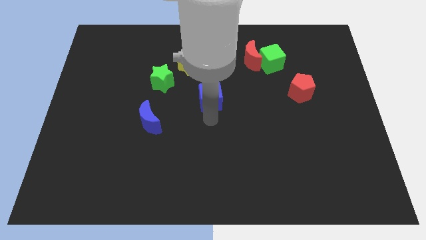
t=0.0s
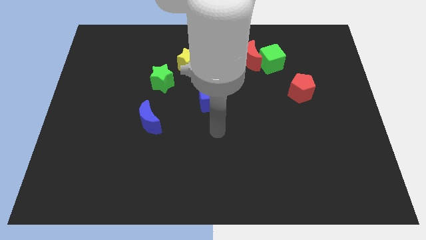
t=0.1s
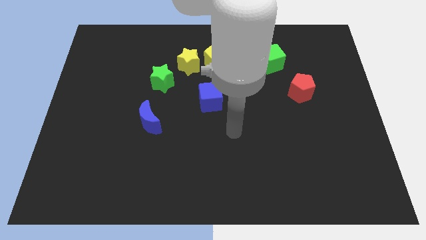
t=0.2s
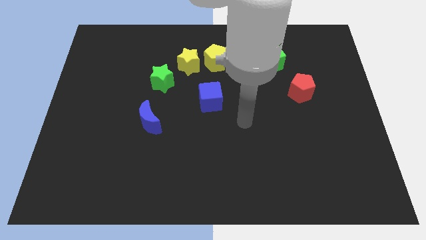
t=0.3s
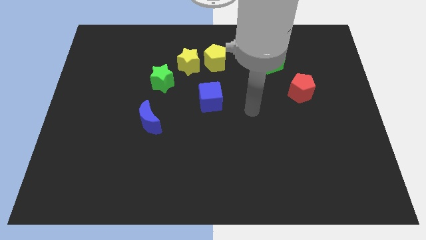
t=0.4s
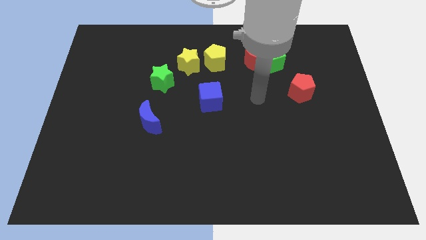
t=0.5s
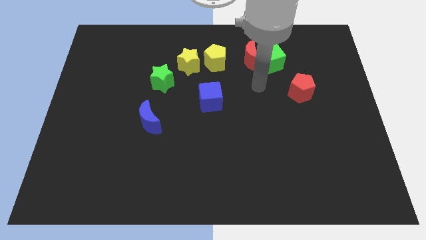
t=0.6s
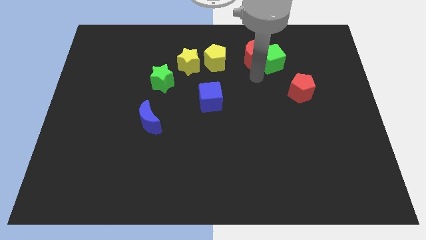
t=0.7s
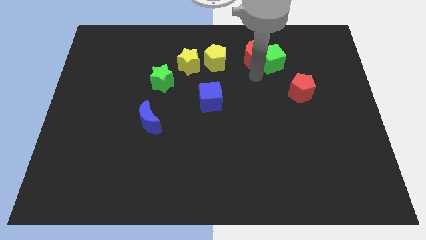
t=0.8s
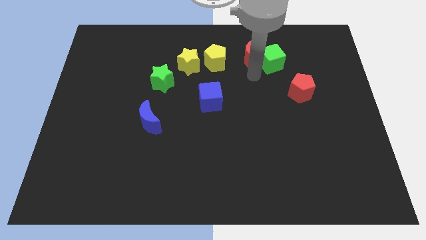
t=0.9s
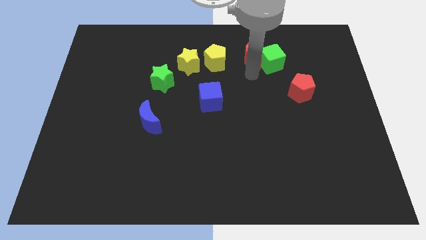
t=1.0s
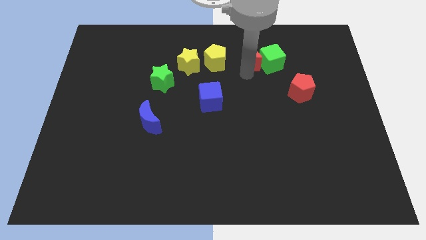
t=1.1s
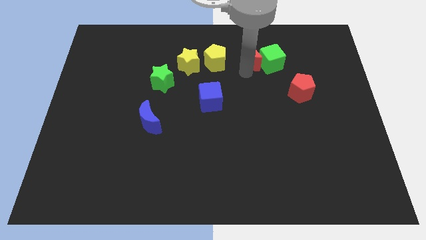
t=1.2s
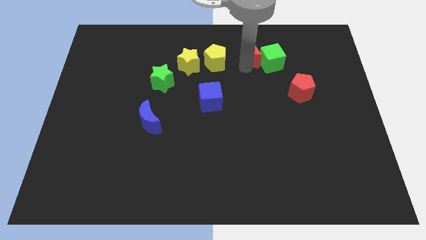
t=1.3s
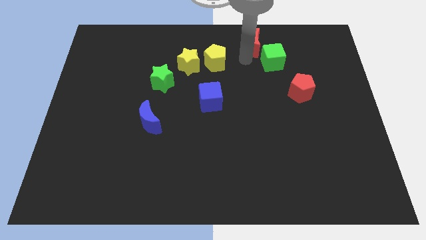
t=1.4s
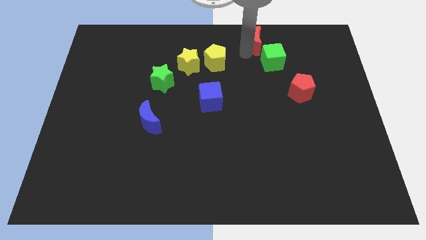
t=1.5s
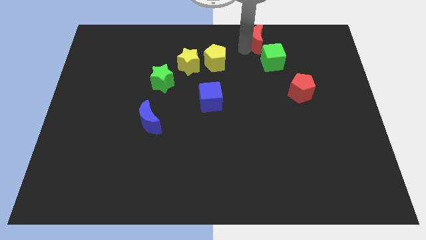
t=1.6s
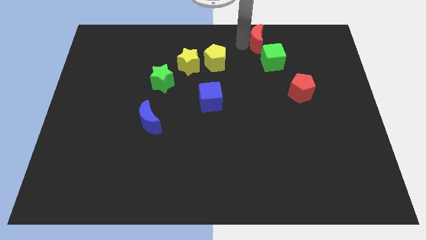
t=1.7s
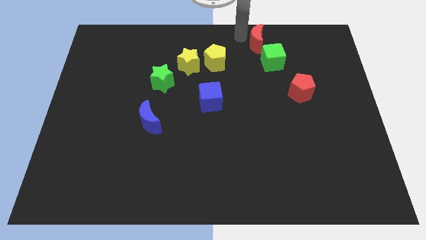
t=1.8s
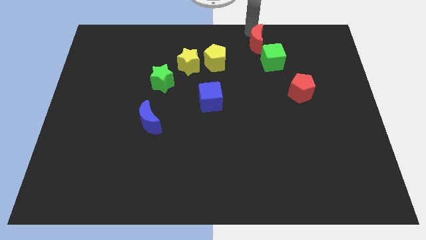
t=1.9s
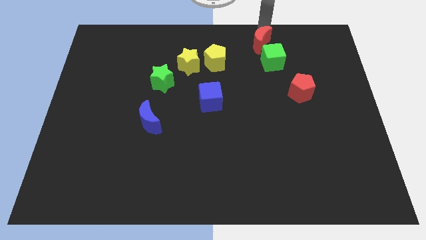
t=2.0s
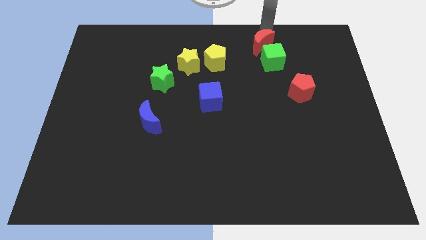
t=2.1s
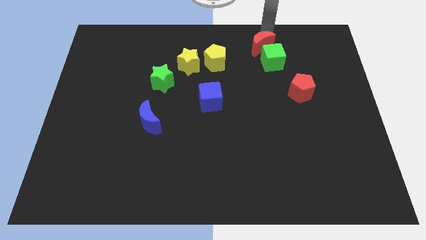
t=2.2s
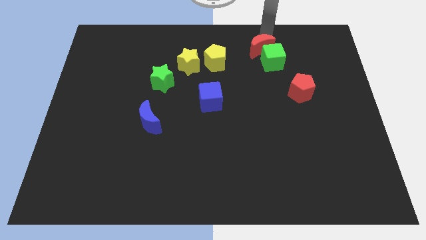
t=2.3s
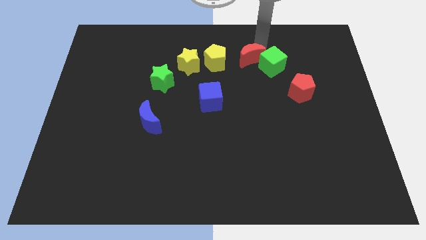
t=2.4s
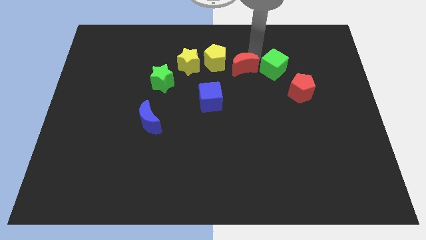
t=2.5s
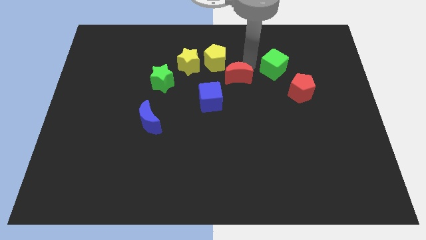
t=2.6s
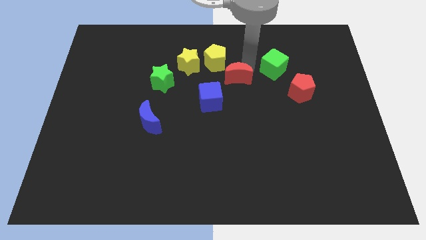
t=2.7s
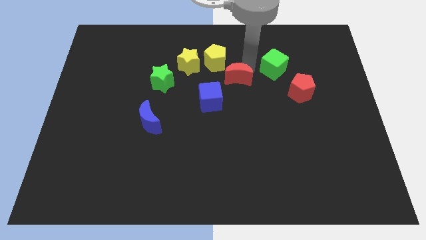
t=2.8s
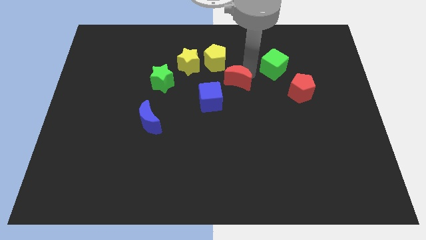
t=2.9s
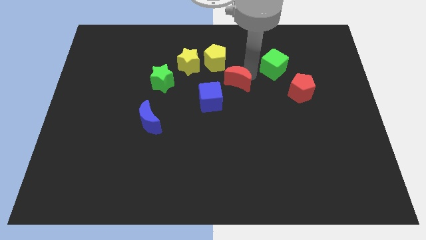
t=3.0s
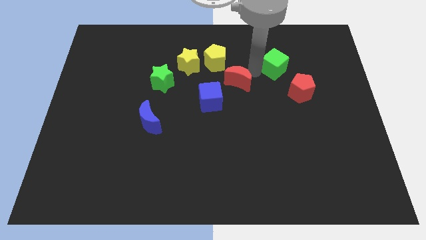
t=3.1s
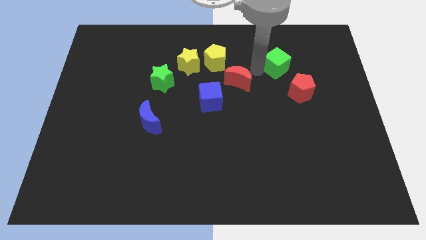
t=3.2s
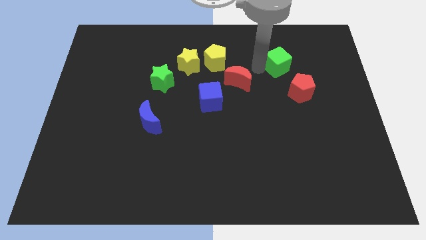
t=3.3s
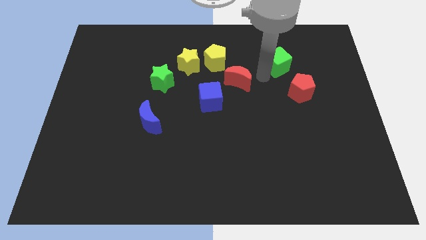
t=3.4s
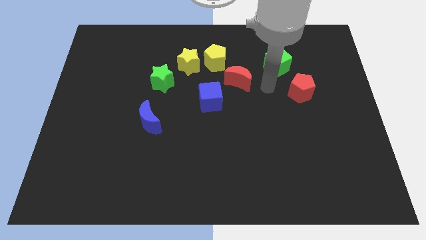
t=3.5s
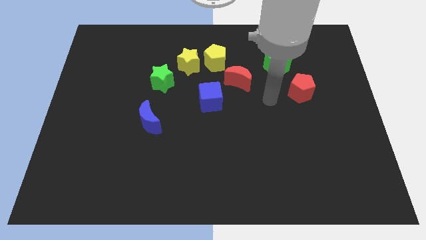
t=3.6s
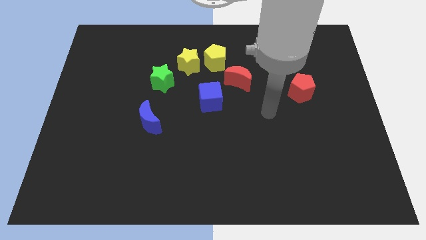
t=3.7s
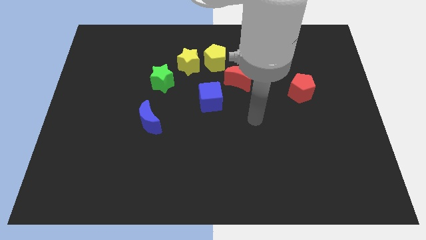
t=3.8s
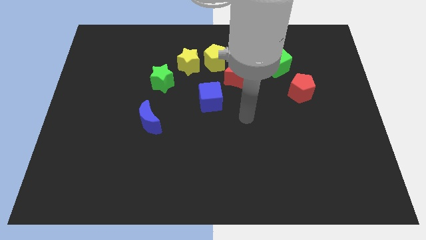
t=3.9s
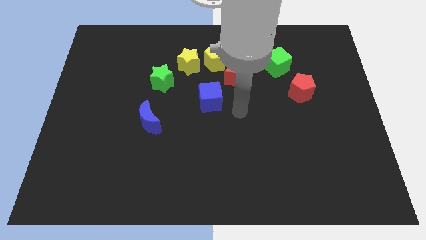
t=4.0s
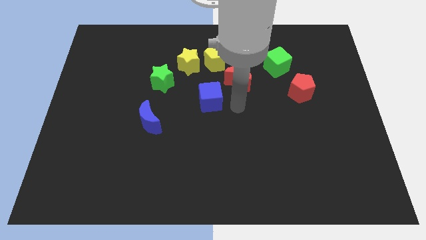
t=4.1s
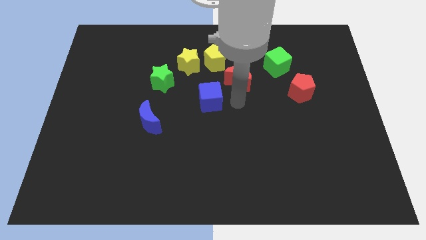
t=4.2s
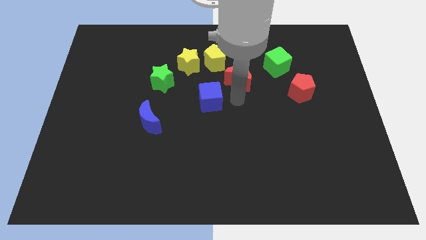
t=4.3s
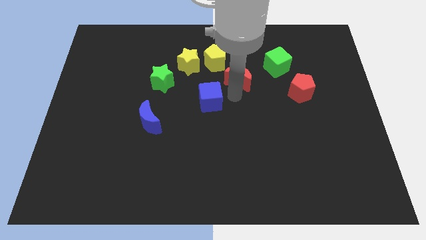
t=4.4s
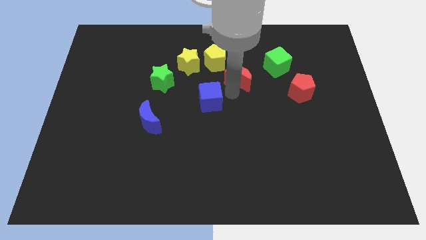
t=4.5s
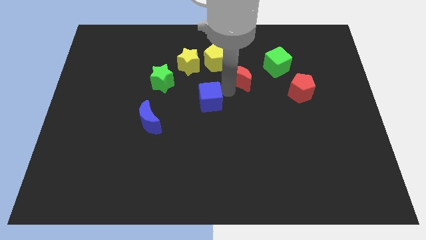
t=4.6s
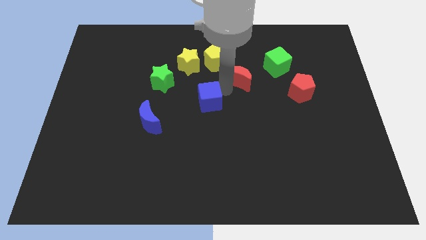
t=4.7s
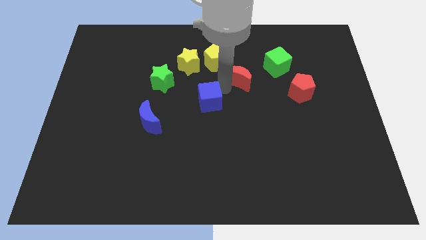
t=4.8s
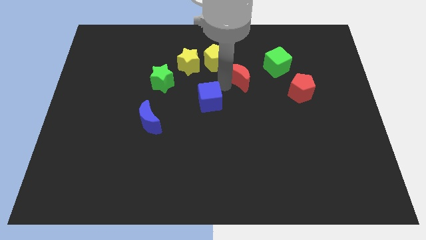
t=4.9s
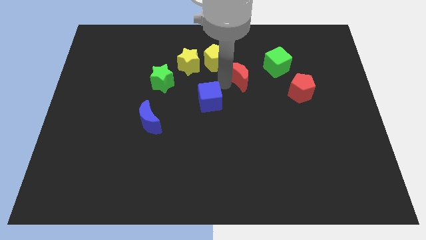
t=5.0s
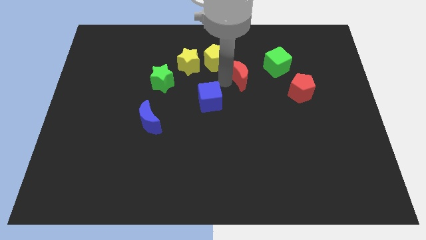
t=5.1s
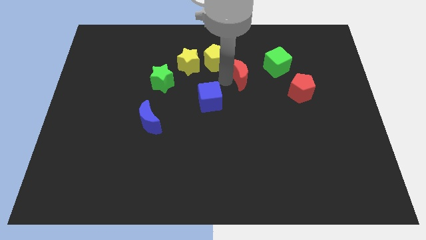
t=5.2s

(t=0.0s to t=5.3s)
push the red crescent to the bottom left of the green cube

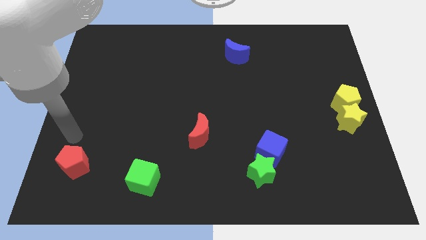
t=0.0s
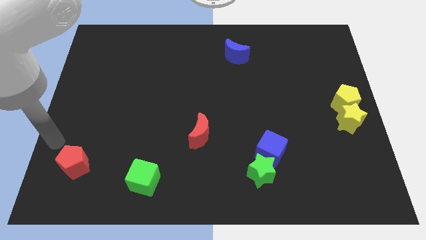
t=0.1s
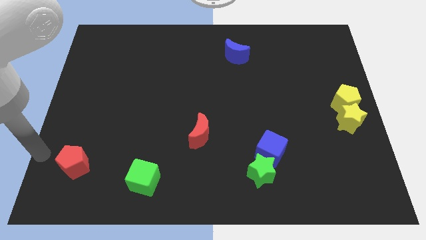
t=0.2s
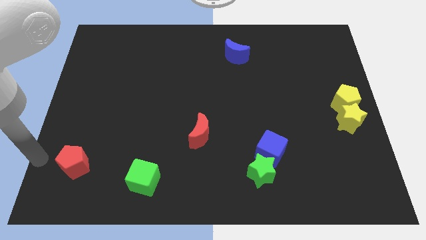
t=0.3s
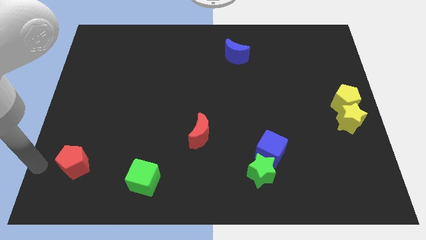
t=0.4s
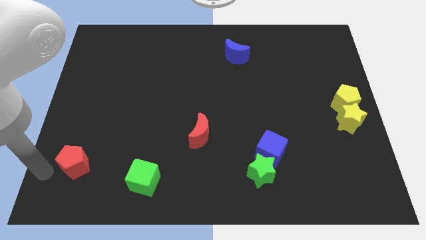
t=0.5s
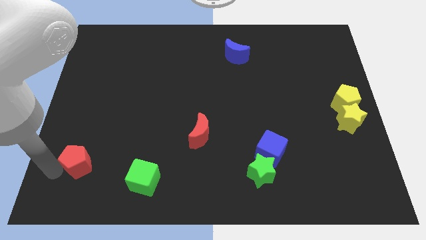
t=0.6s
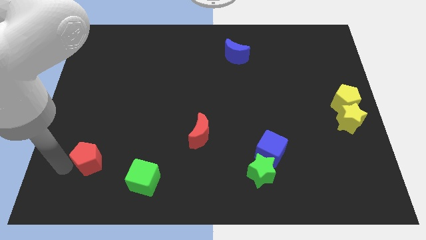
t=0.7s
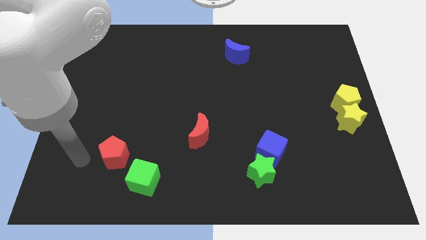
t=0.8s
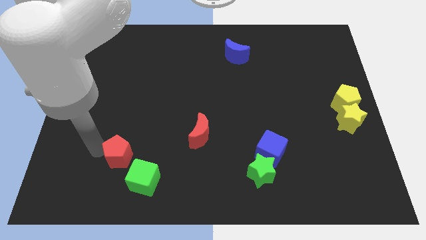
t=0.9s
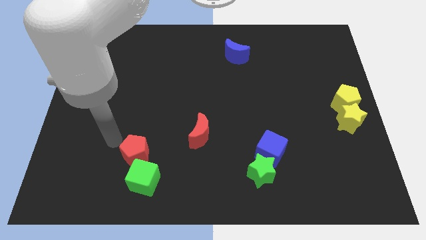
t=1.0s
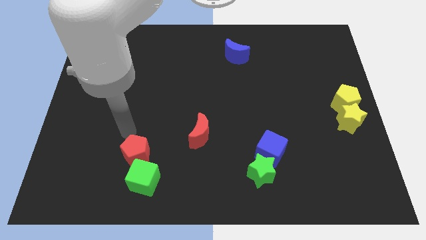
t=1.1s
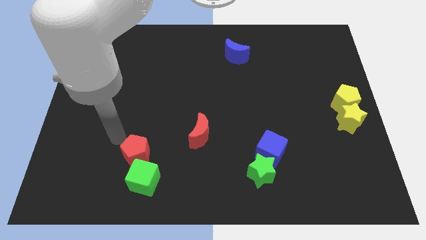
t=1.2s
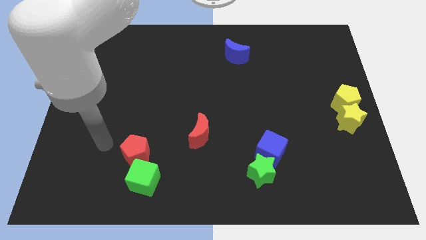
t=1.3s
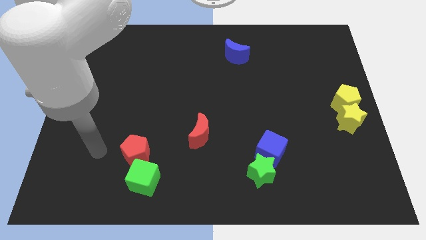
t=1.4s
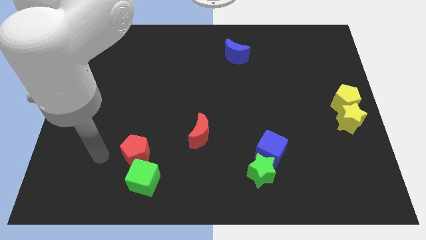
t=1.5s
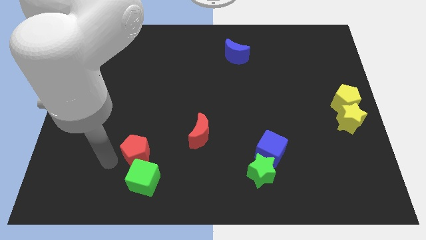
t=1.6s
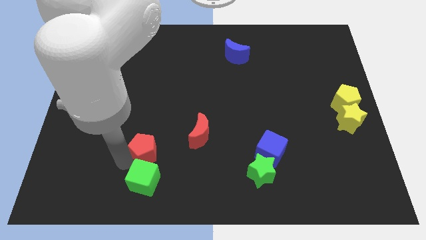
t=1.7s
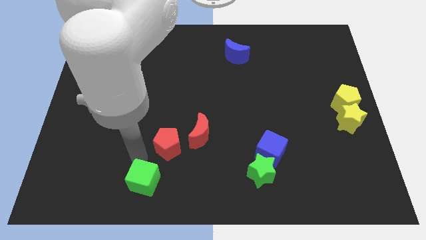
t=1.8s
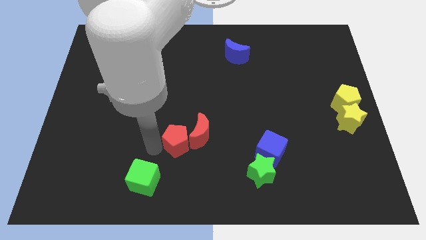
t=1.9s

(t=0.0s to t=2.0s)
push the red pentagon into the red crescent

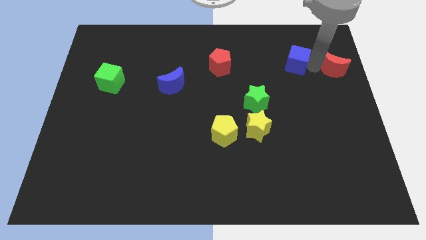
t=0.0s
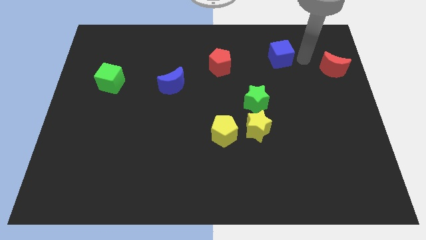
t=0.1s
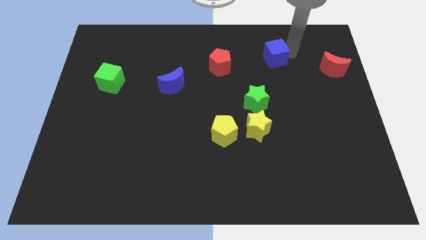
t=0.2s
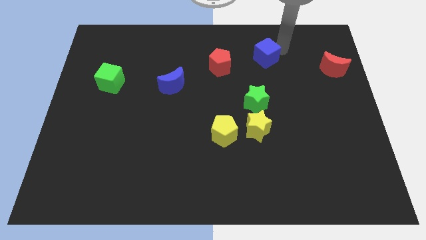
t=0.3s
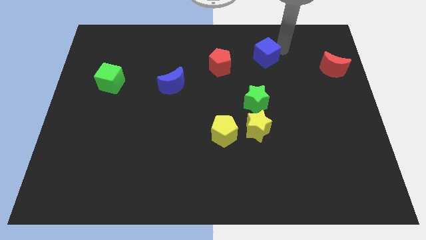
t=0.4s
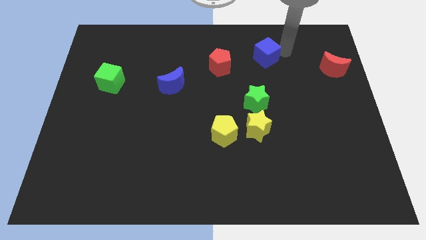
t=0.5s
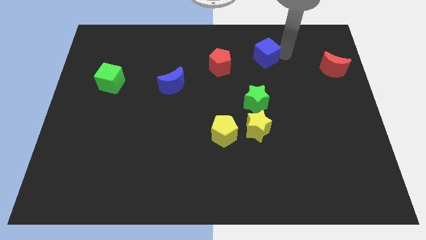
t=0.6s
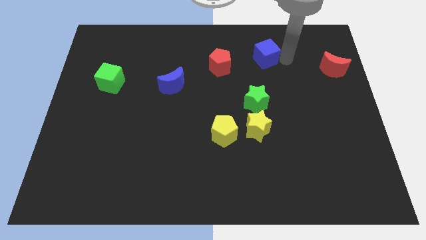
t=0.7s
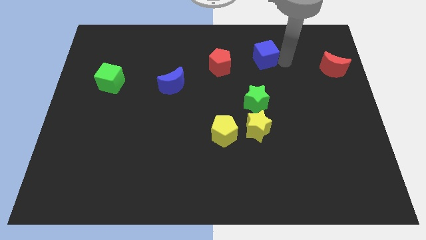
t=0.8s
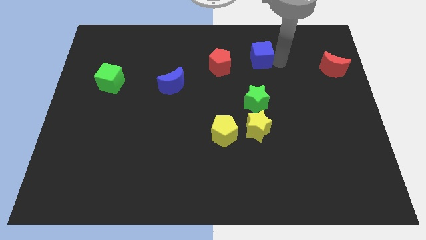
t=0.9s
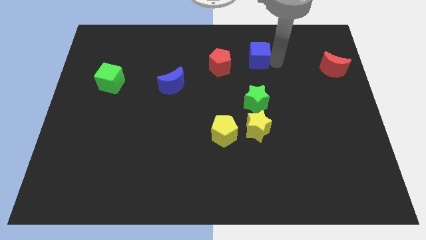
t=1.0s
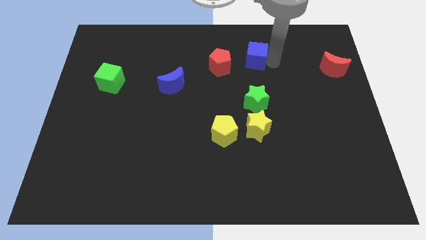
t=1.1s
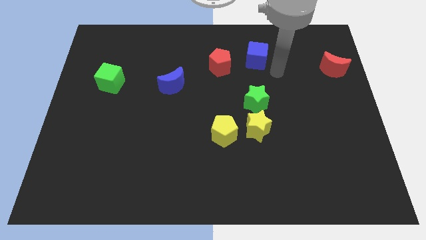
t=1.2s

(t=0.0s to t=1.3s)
place the blue cube above the green star

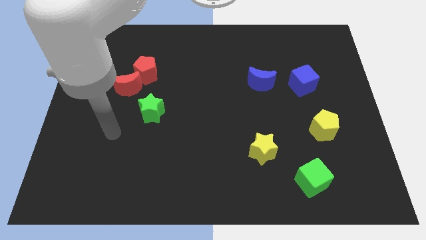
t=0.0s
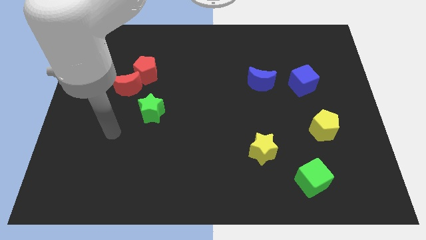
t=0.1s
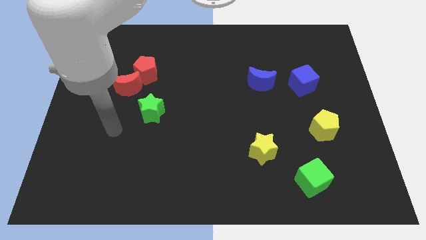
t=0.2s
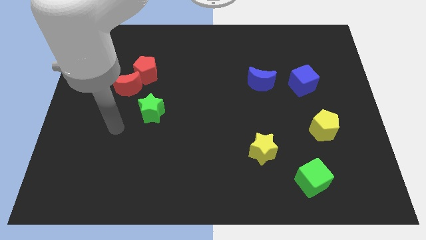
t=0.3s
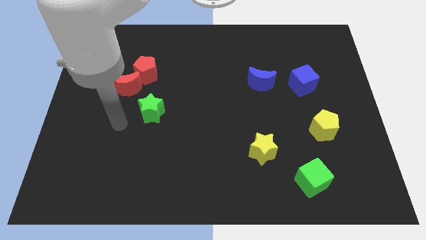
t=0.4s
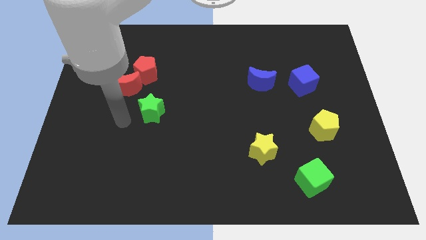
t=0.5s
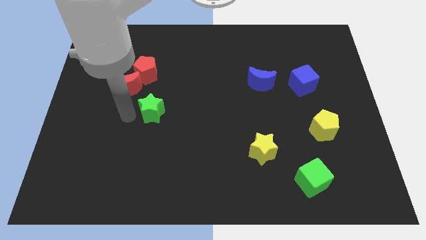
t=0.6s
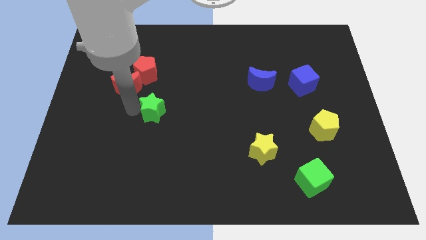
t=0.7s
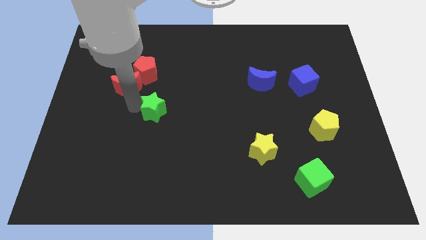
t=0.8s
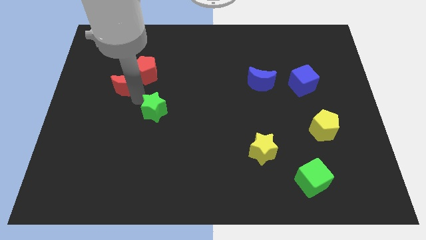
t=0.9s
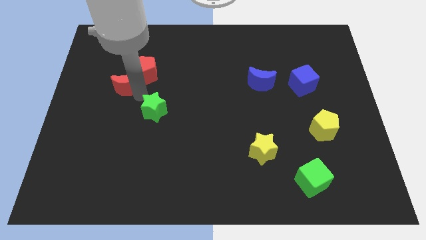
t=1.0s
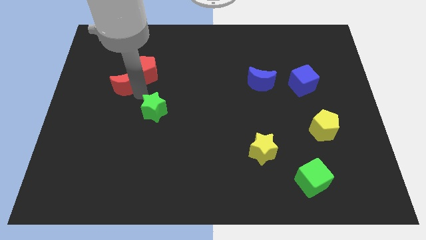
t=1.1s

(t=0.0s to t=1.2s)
slightly move the green star to the center
